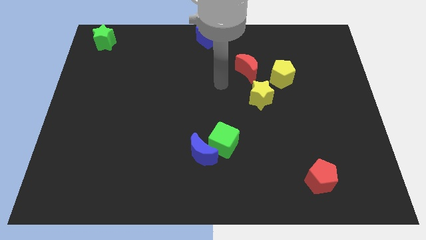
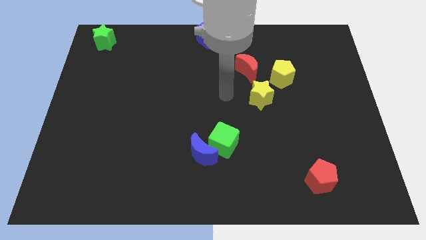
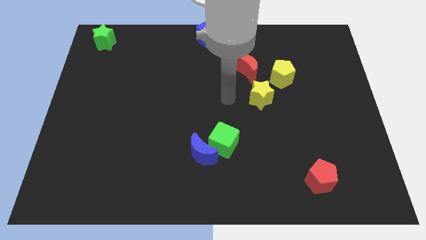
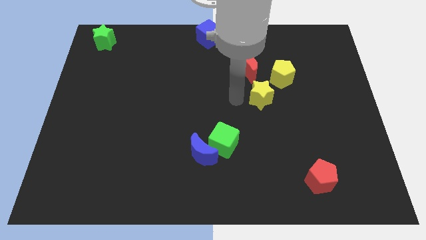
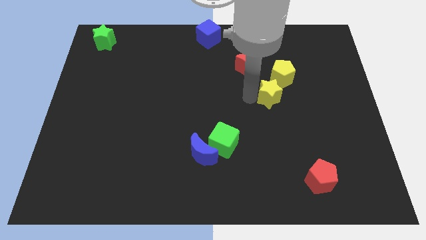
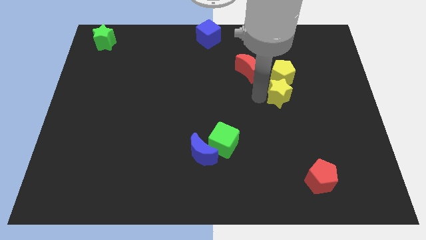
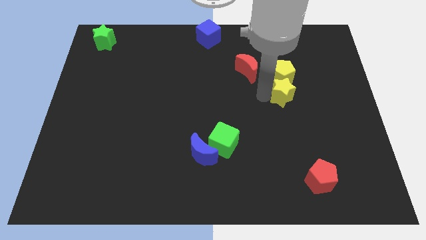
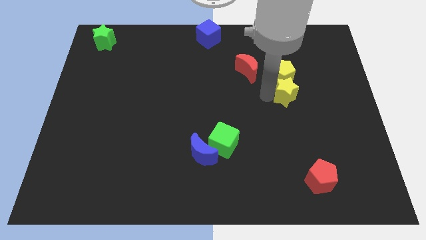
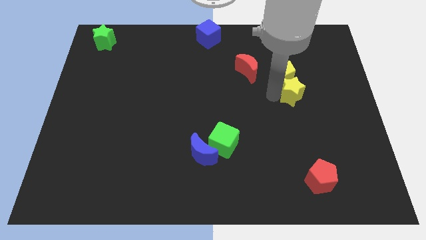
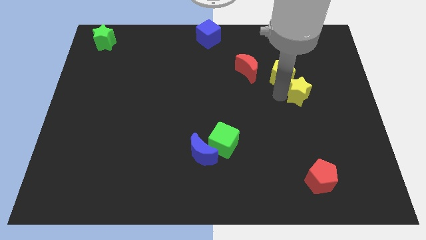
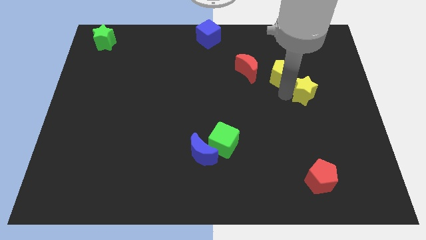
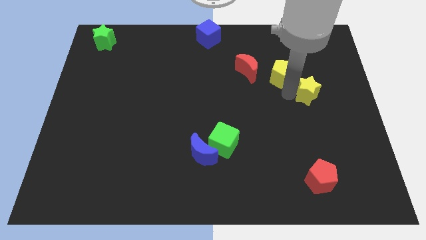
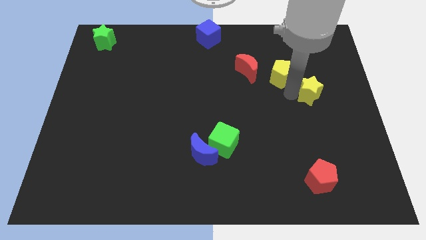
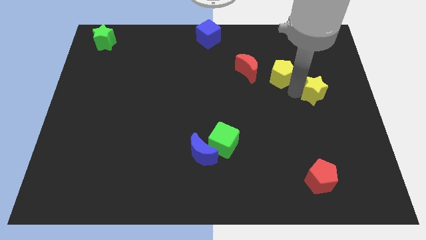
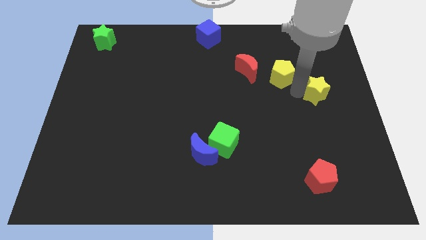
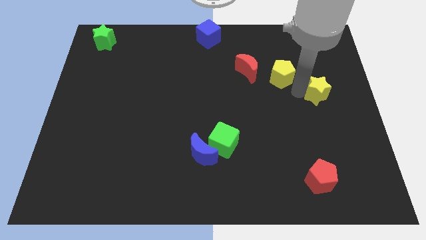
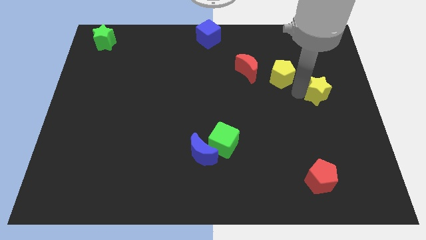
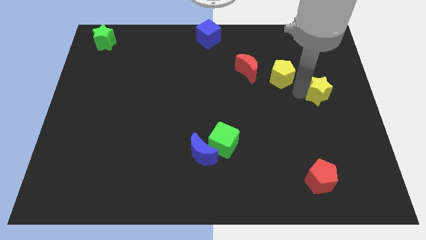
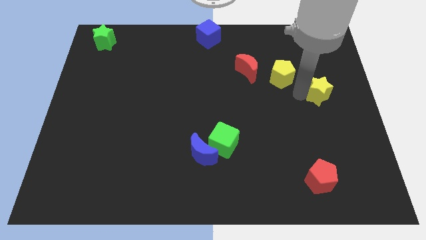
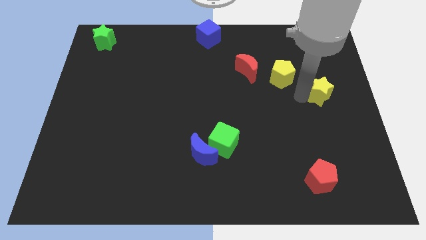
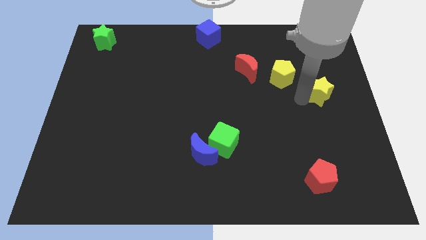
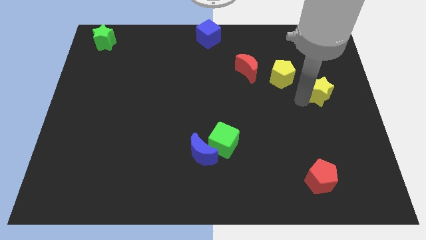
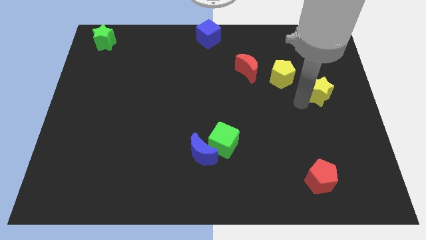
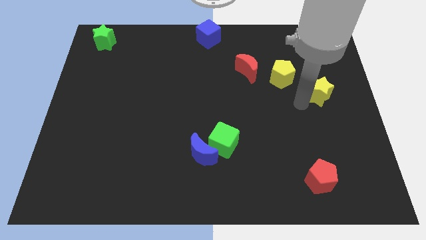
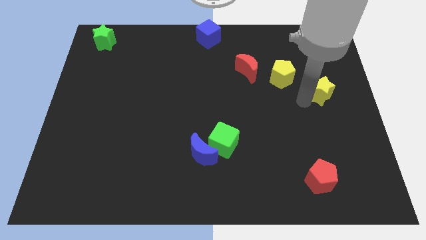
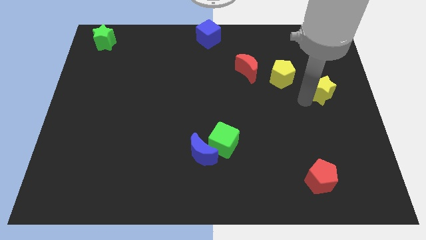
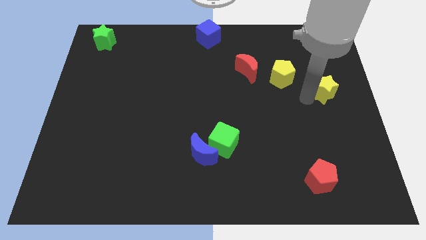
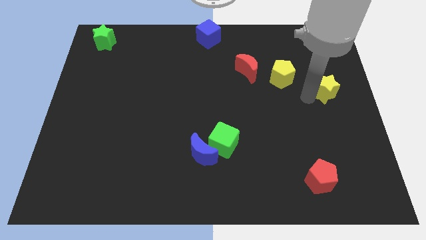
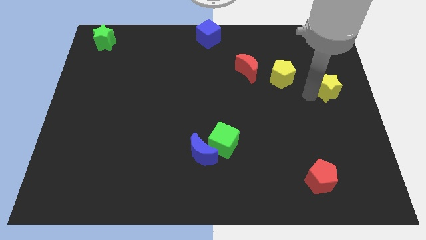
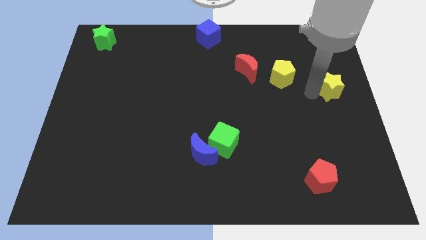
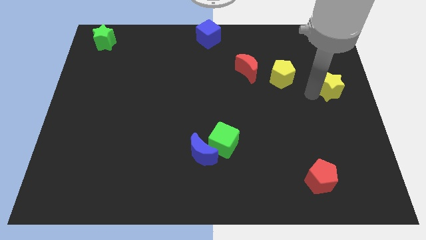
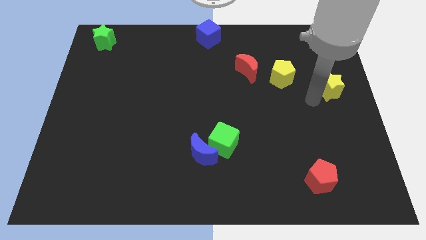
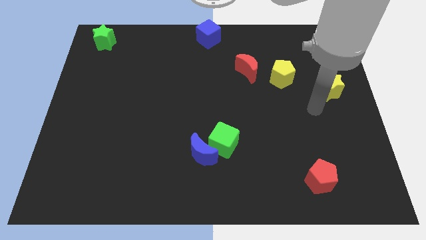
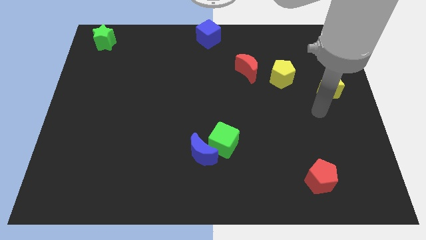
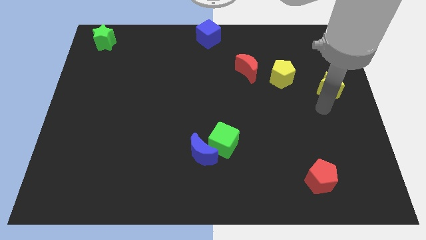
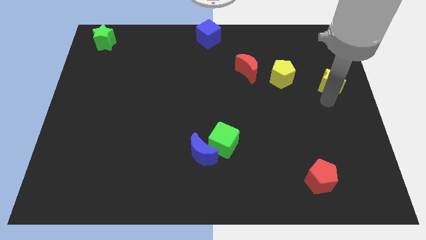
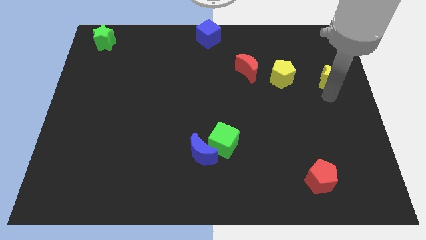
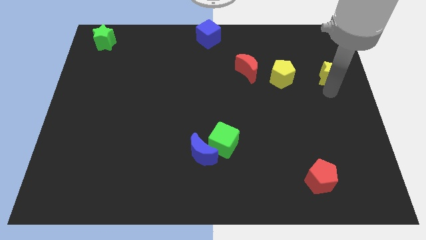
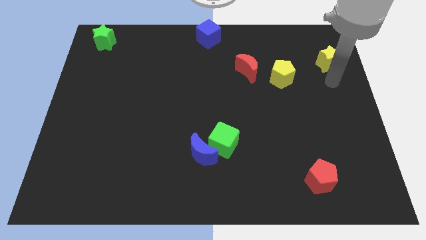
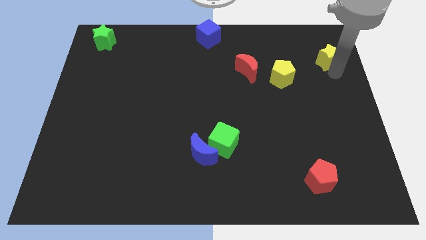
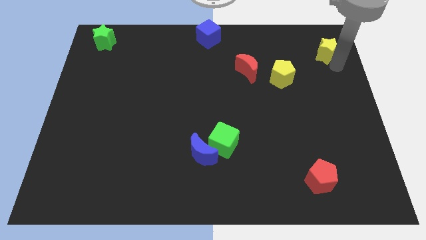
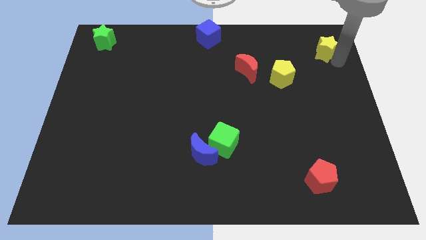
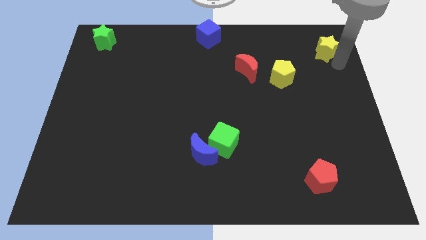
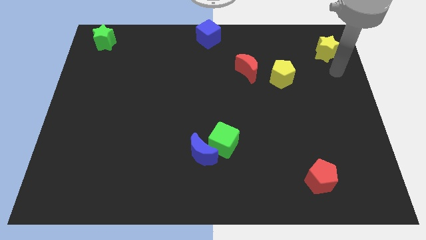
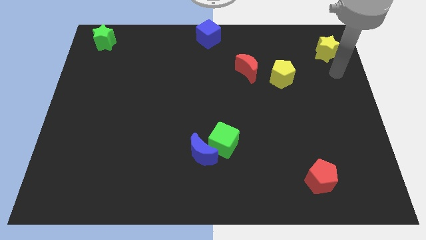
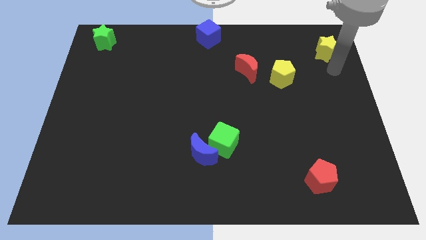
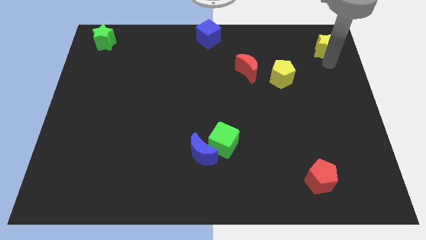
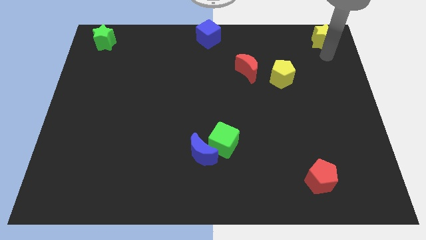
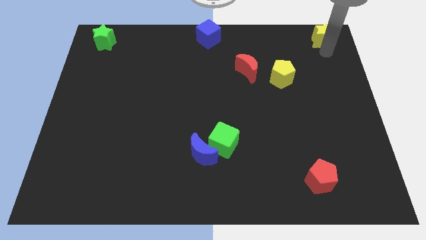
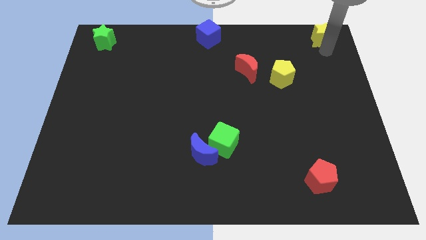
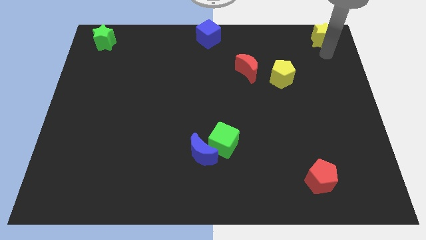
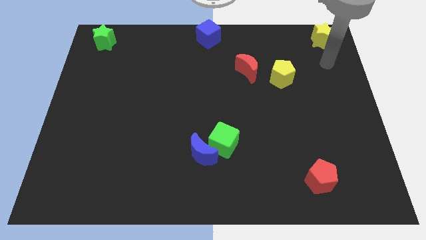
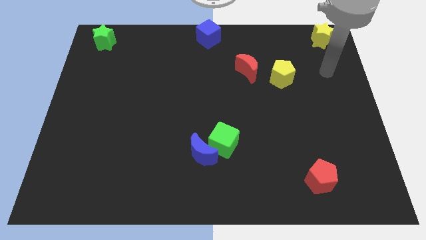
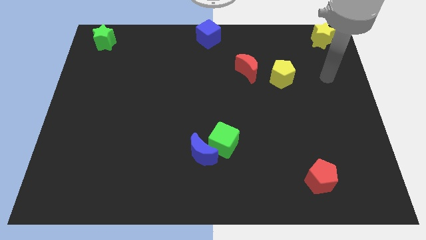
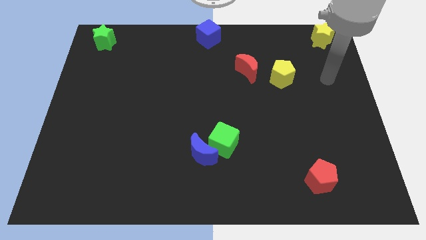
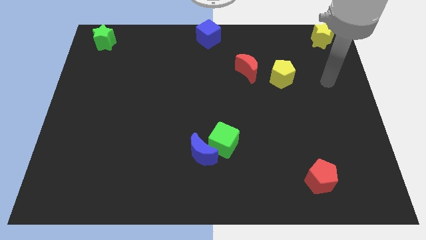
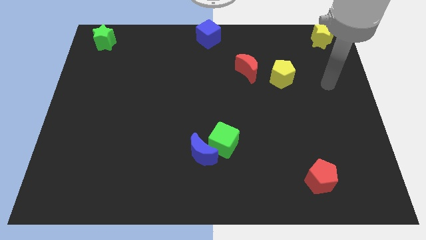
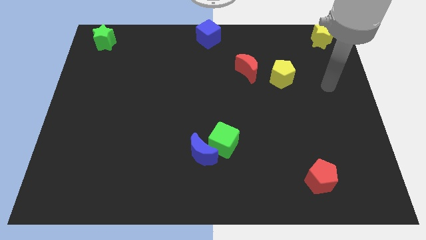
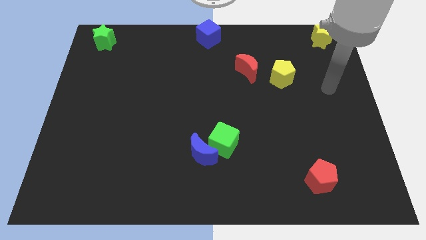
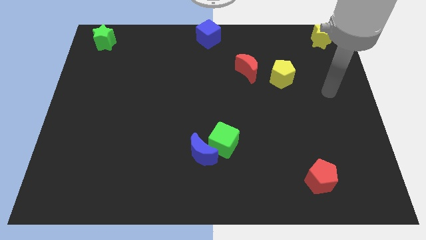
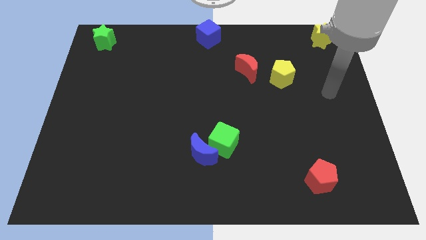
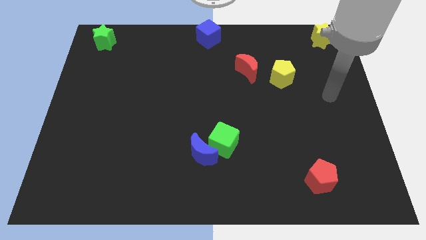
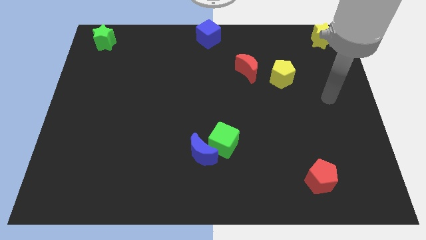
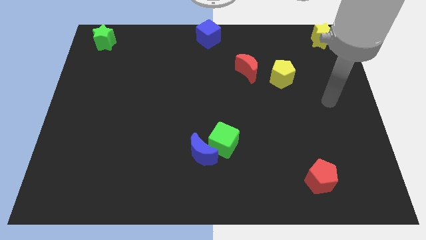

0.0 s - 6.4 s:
move the yellow star to the top right corner

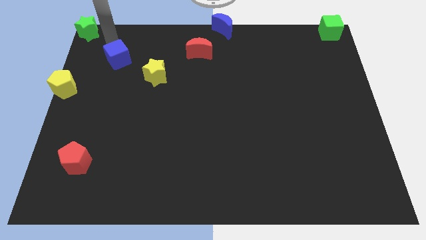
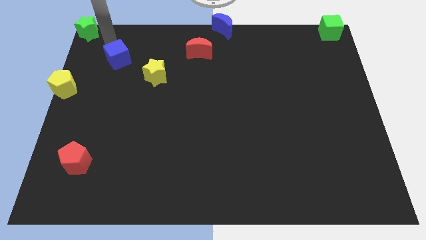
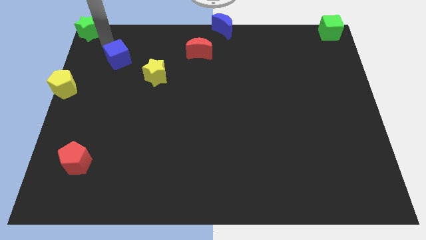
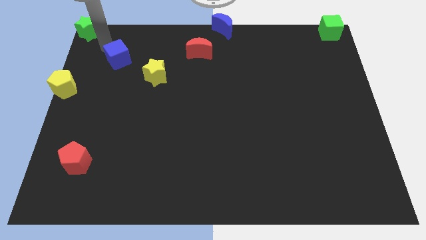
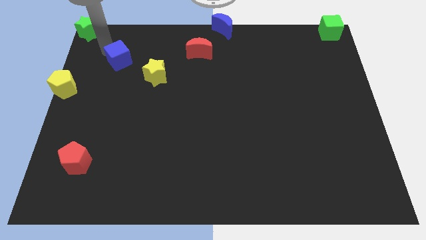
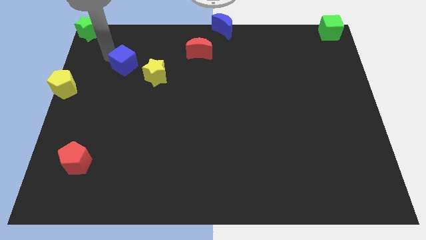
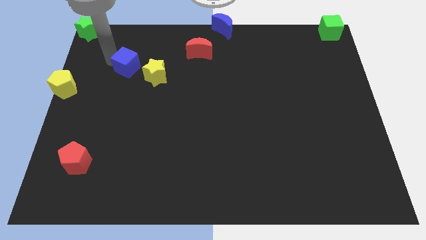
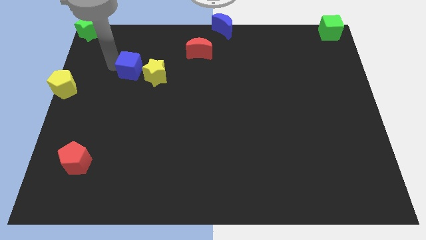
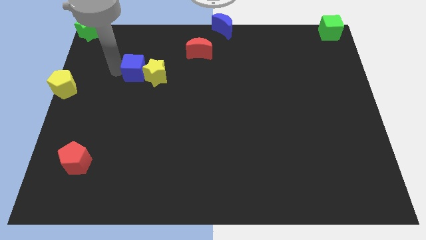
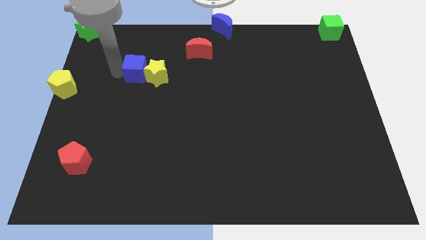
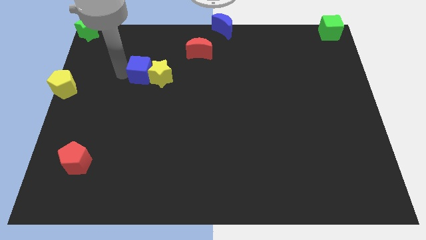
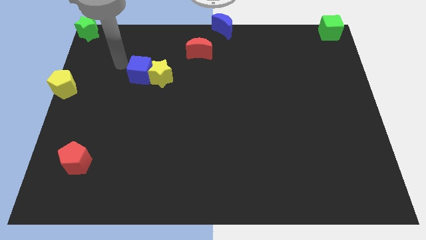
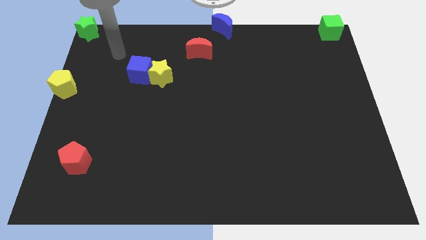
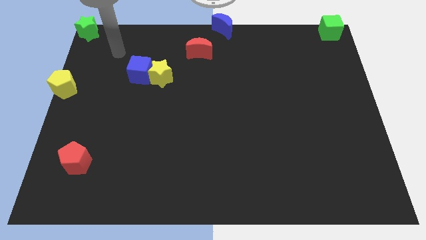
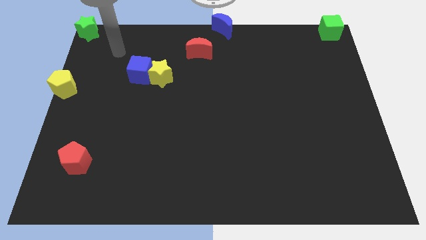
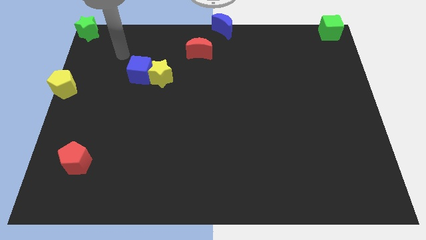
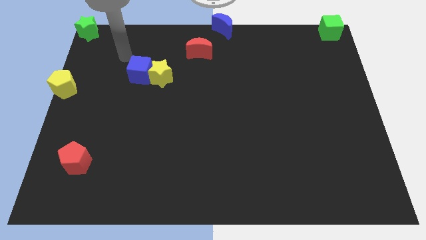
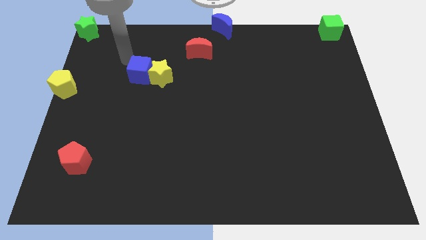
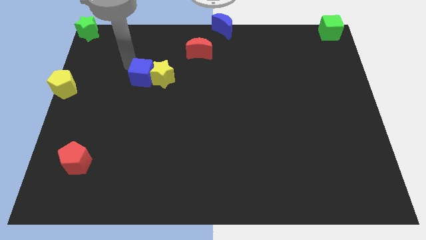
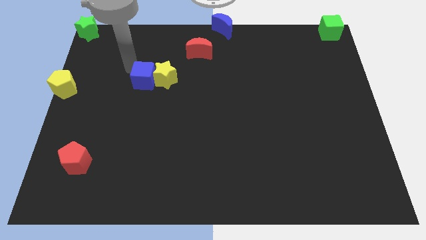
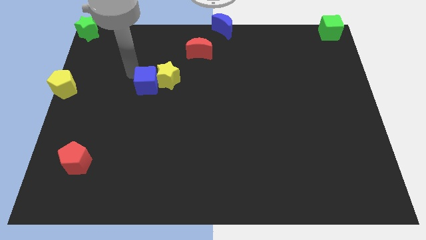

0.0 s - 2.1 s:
move the blue cube into the left of yellow star

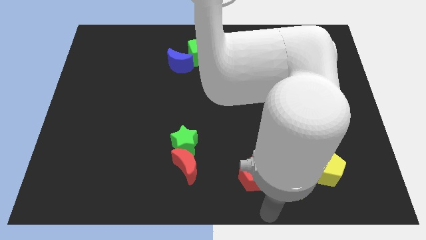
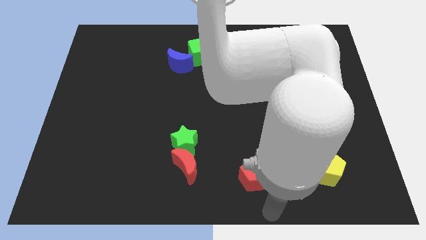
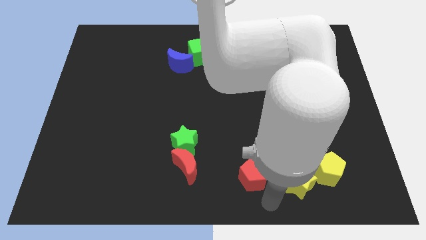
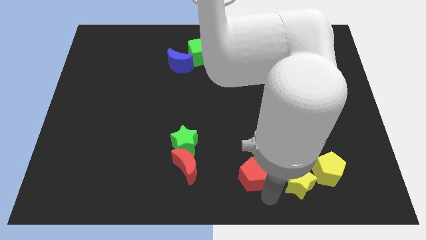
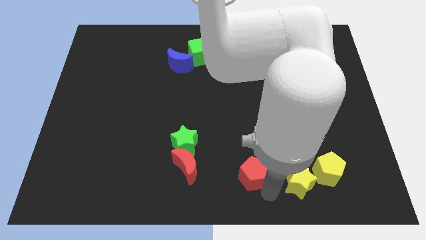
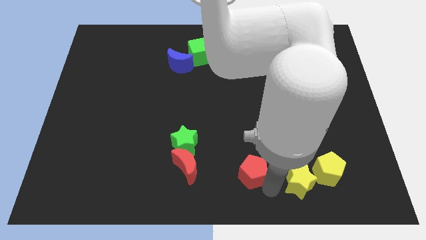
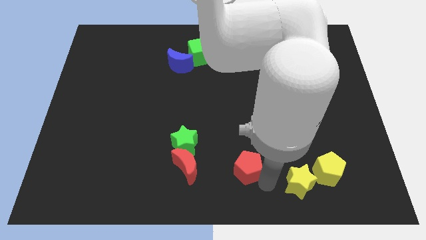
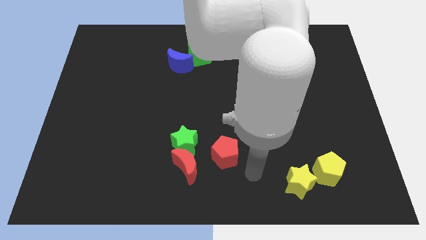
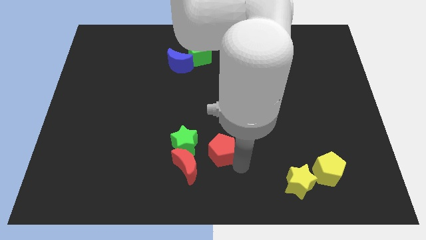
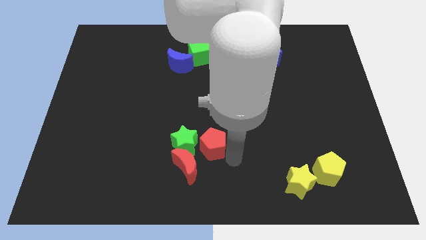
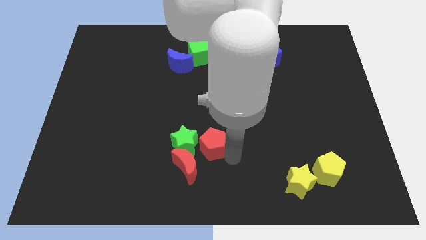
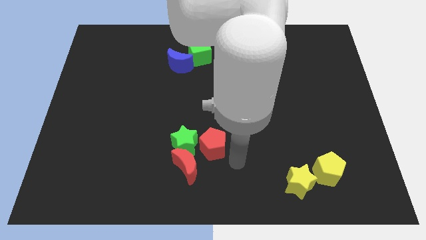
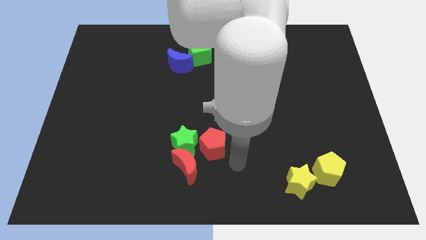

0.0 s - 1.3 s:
place red pentagon to the right of green star
